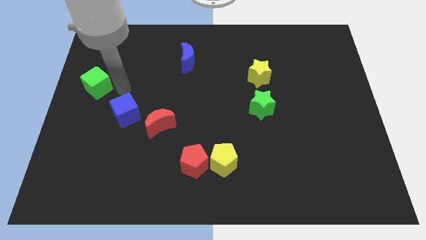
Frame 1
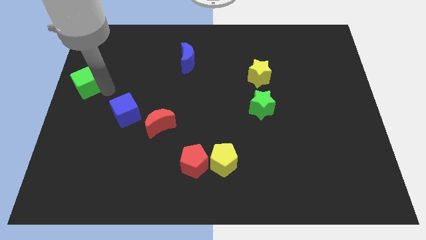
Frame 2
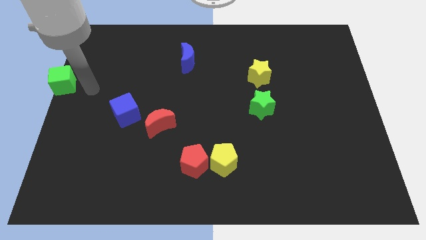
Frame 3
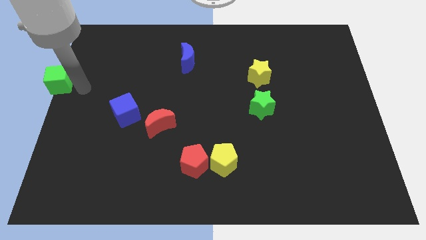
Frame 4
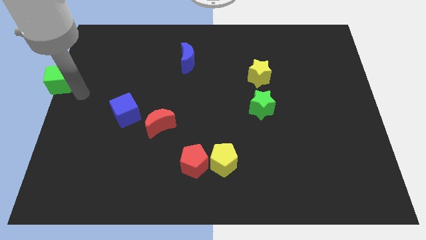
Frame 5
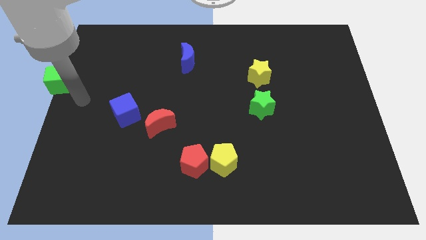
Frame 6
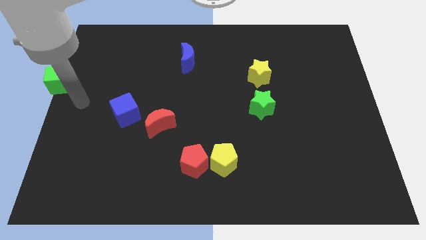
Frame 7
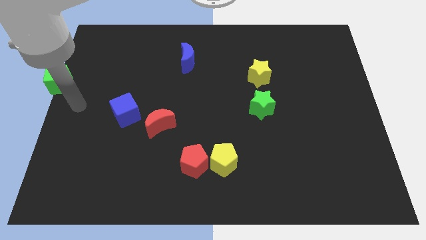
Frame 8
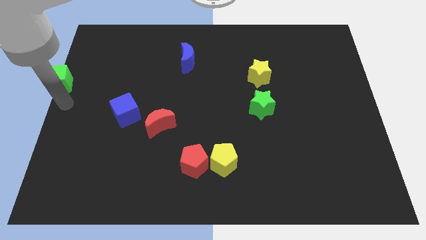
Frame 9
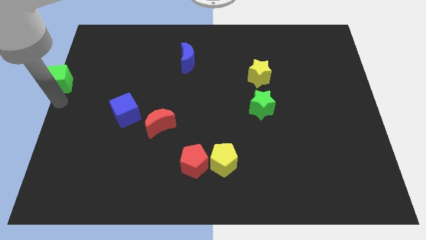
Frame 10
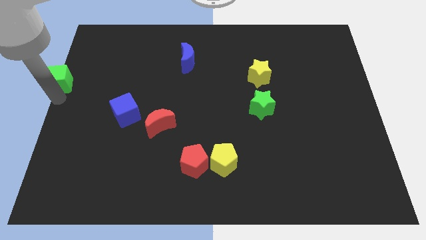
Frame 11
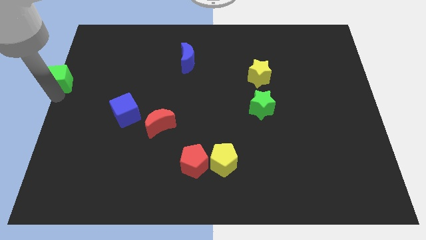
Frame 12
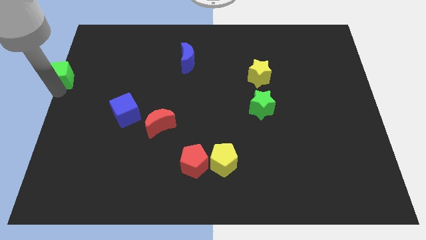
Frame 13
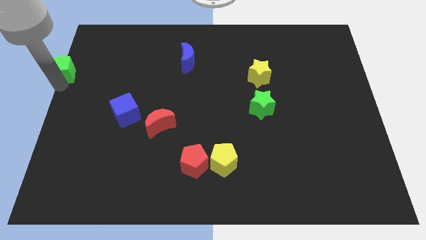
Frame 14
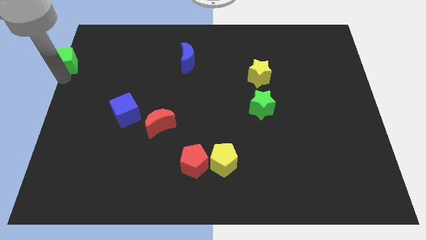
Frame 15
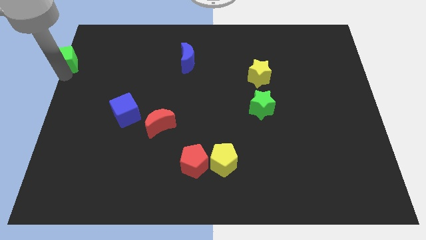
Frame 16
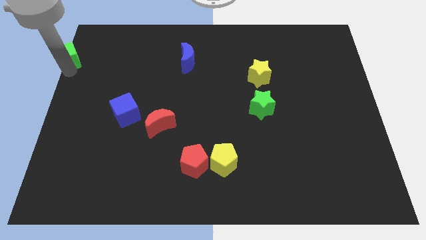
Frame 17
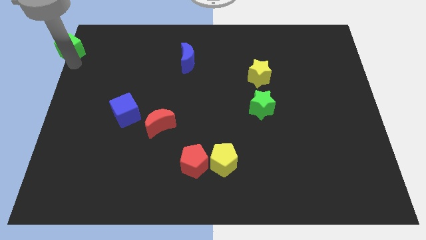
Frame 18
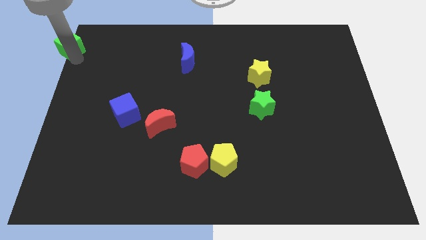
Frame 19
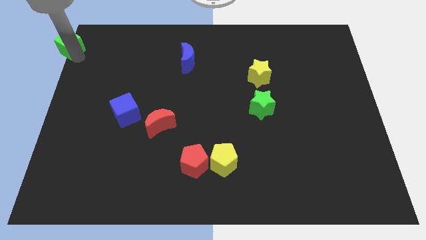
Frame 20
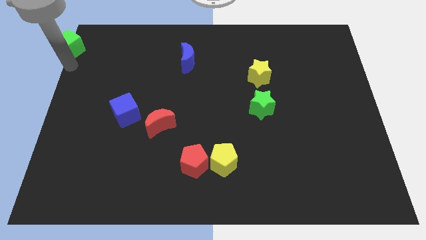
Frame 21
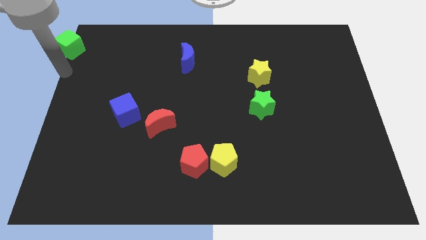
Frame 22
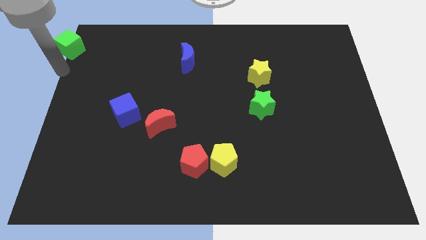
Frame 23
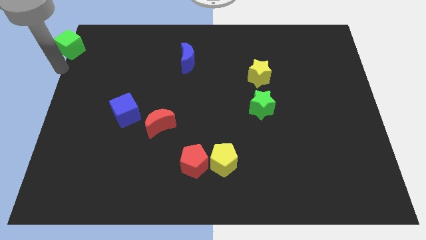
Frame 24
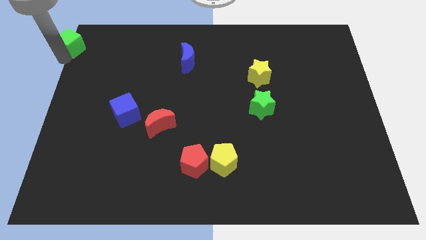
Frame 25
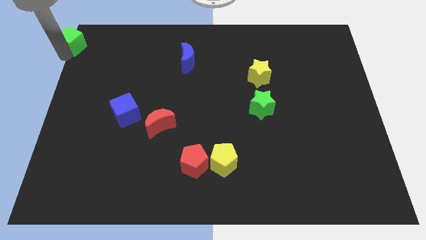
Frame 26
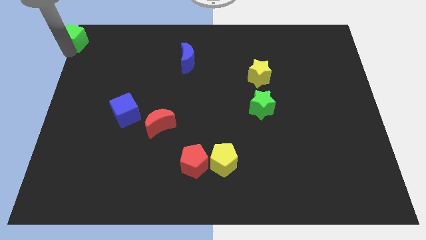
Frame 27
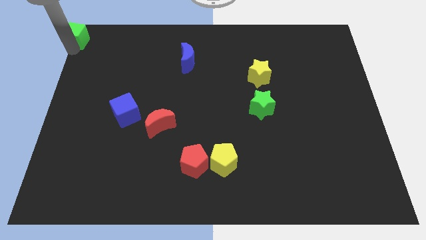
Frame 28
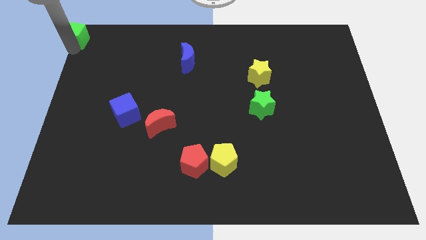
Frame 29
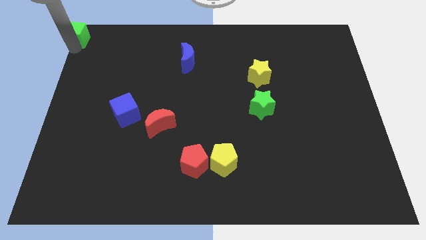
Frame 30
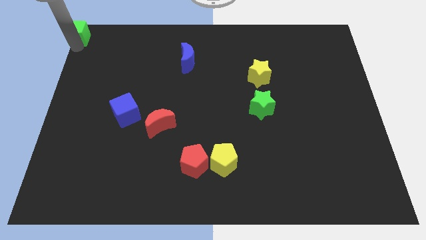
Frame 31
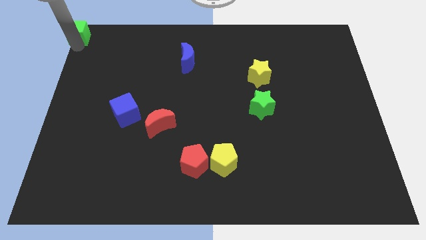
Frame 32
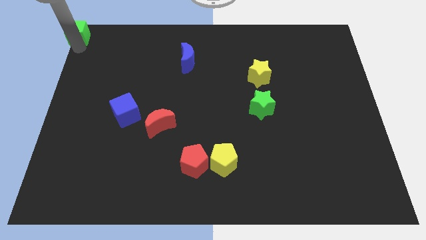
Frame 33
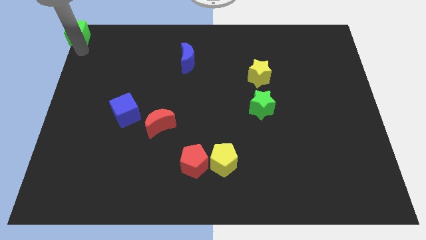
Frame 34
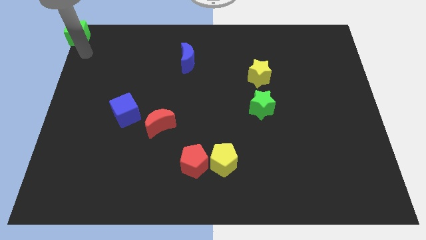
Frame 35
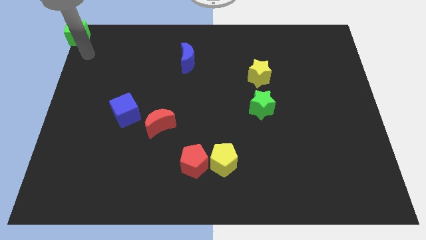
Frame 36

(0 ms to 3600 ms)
place green cube towards left top corner

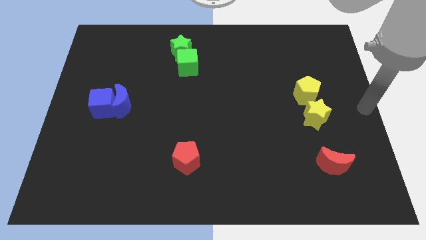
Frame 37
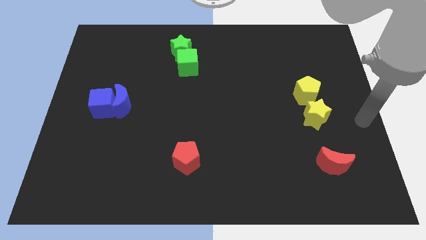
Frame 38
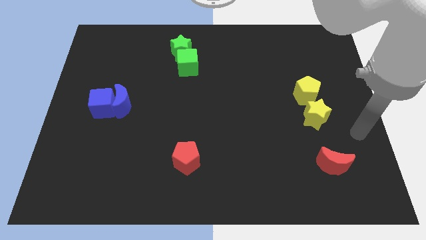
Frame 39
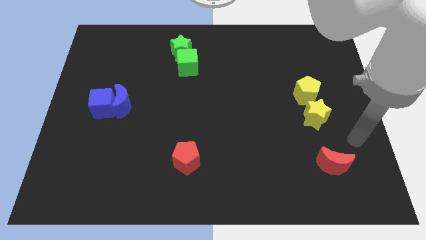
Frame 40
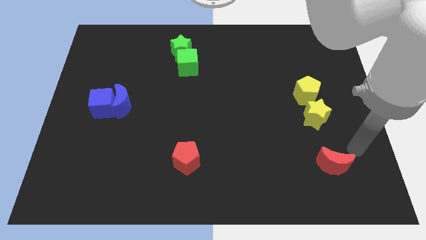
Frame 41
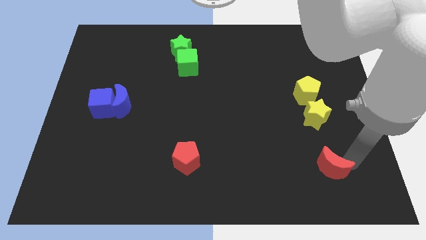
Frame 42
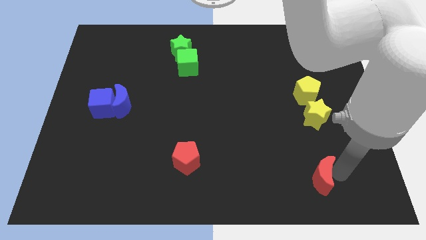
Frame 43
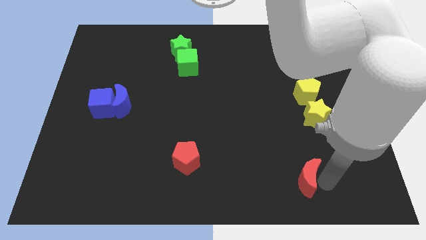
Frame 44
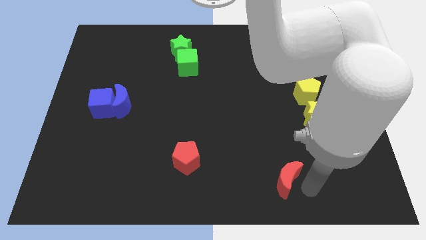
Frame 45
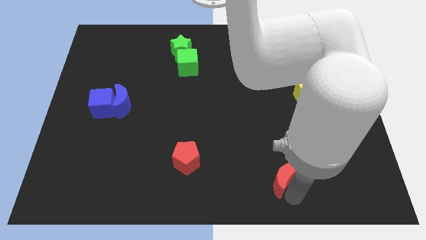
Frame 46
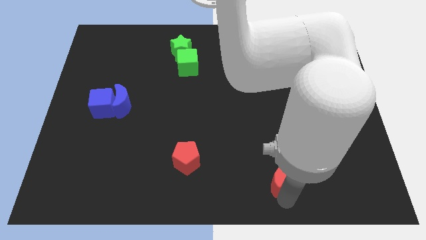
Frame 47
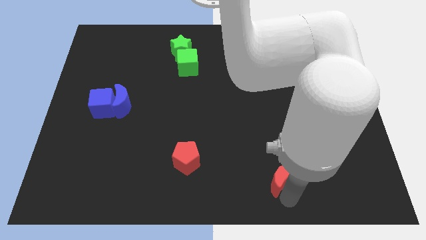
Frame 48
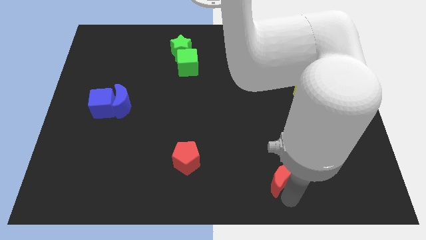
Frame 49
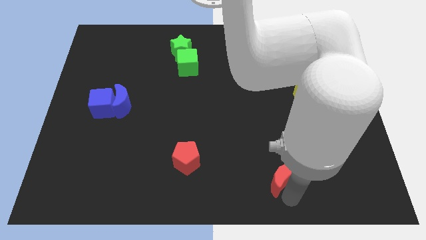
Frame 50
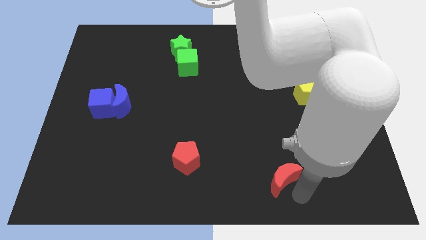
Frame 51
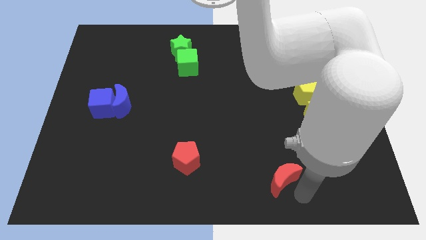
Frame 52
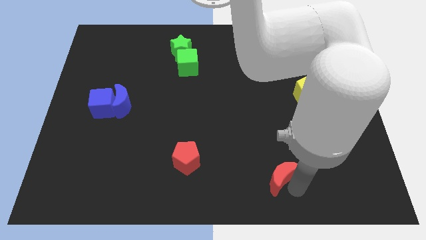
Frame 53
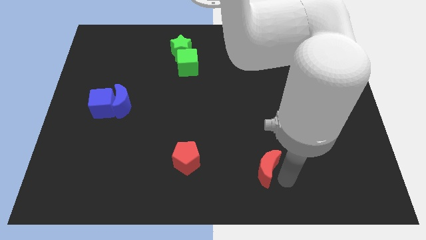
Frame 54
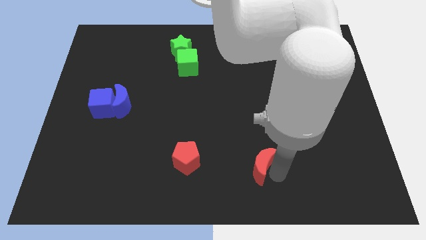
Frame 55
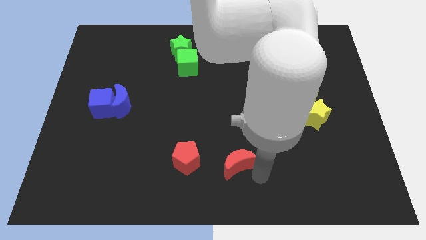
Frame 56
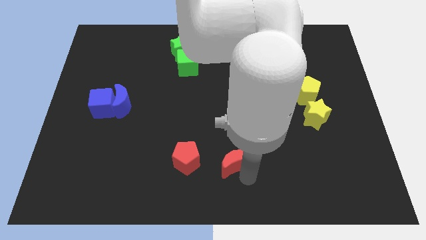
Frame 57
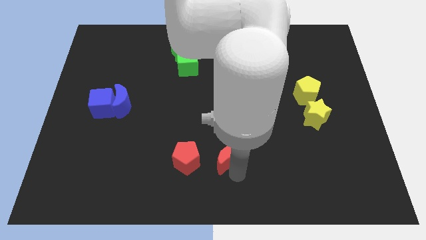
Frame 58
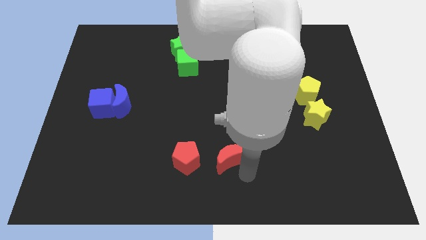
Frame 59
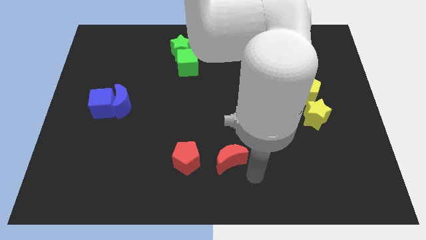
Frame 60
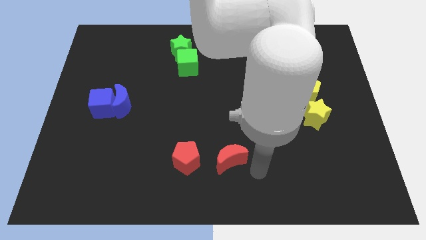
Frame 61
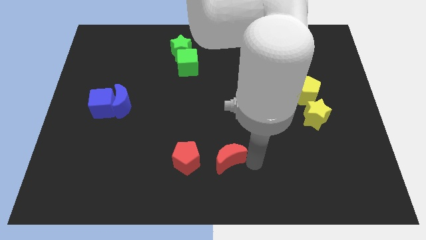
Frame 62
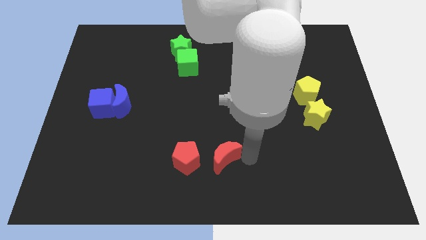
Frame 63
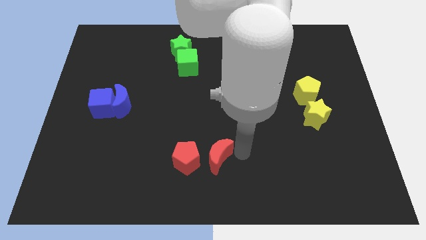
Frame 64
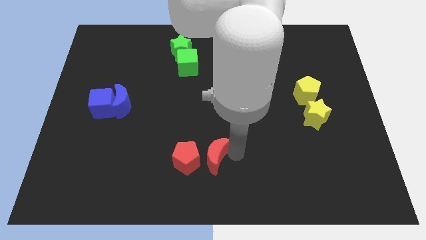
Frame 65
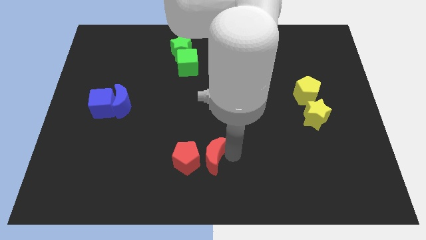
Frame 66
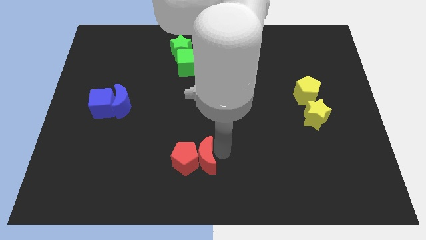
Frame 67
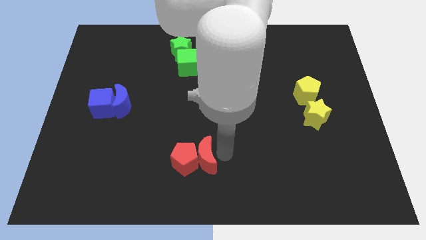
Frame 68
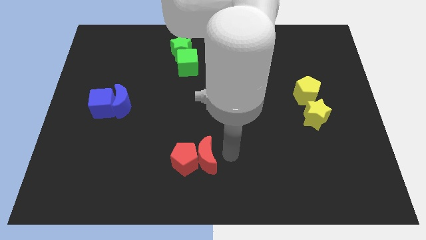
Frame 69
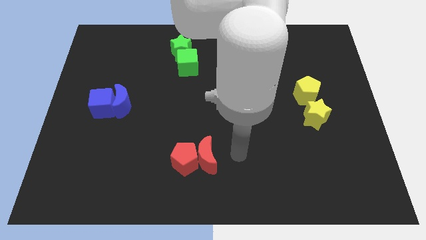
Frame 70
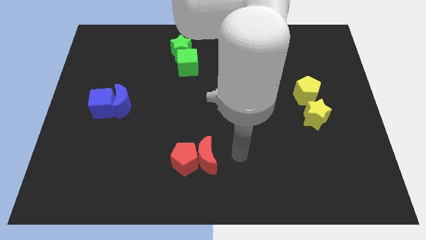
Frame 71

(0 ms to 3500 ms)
push the red crescent into the red pentagon

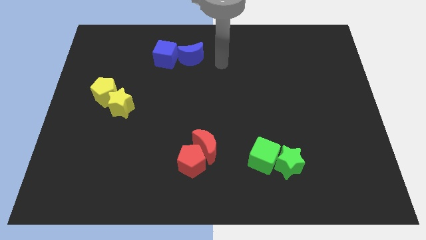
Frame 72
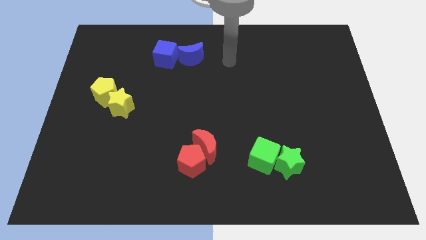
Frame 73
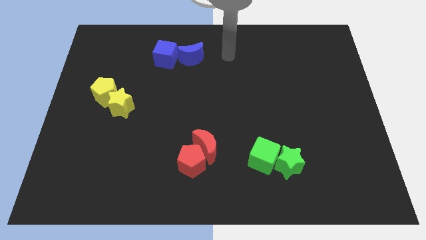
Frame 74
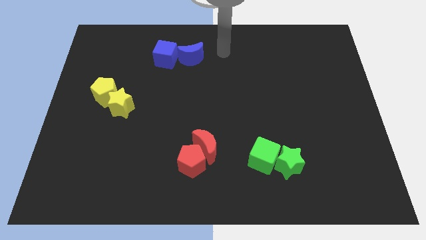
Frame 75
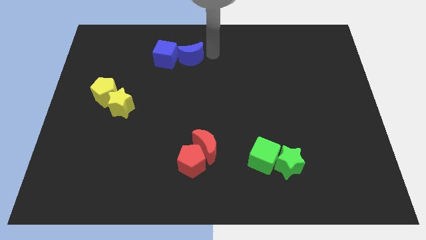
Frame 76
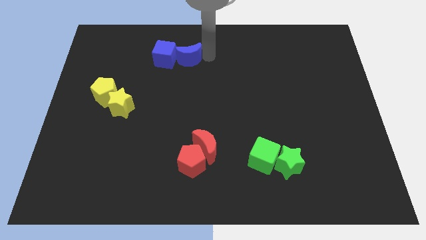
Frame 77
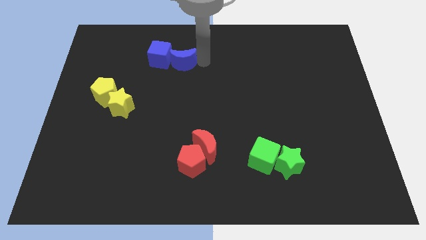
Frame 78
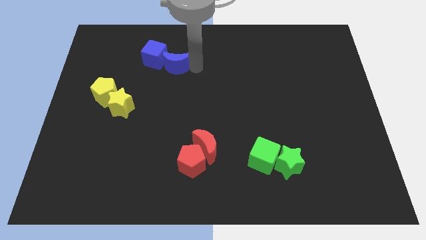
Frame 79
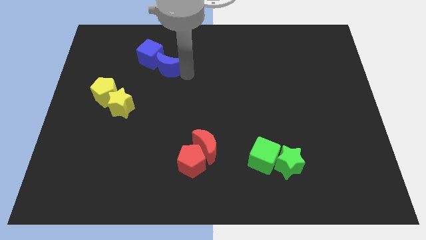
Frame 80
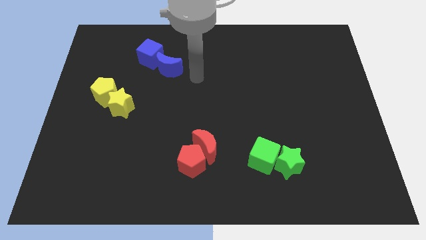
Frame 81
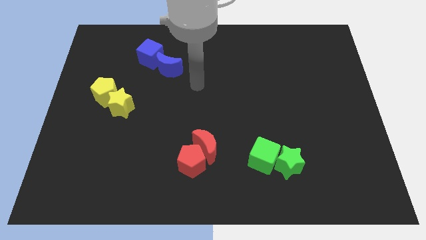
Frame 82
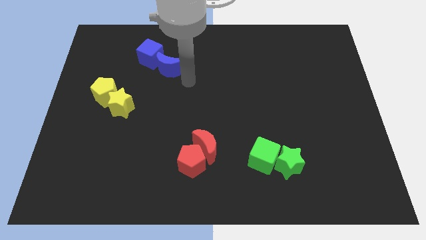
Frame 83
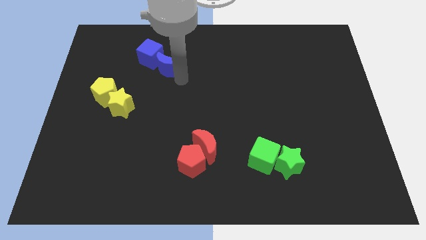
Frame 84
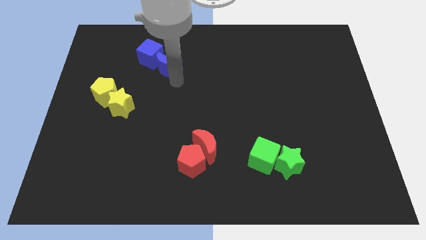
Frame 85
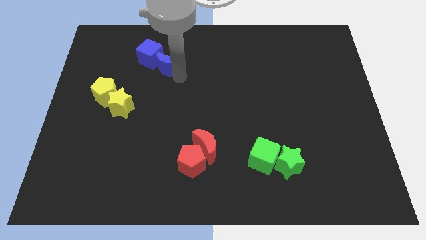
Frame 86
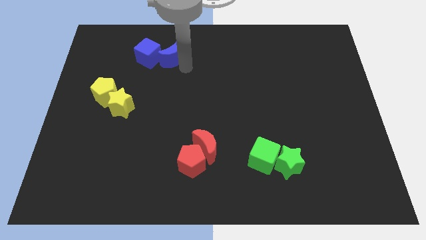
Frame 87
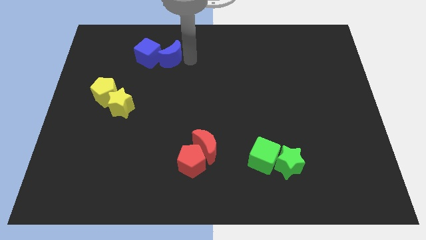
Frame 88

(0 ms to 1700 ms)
move the blue moon slightly to the left
